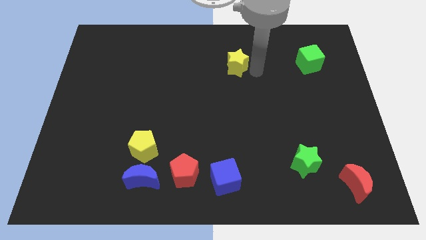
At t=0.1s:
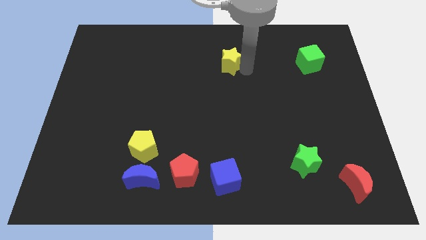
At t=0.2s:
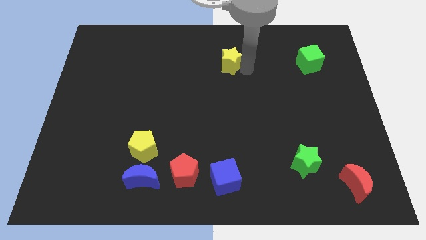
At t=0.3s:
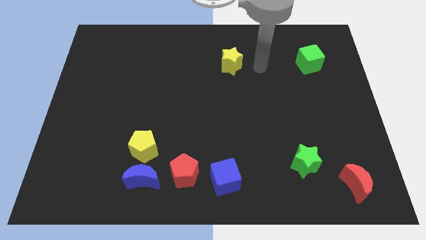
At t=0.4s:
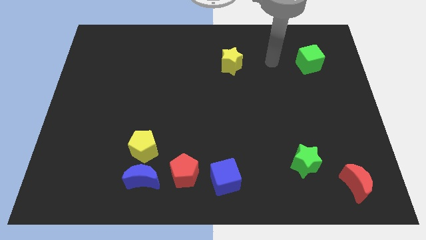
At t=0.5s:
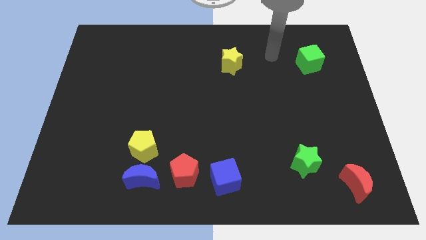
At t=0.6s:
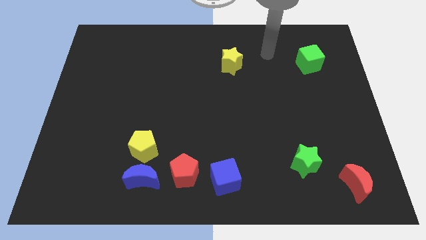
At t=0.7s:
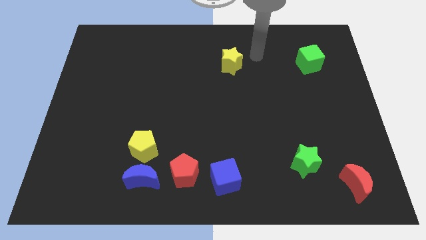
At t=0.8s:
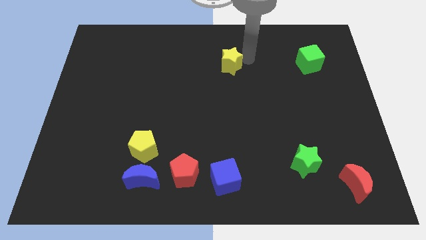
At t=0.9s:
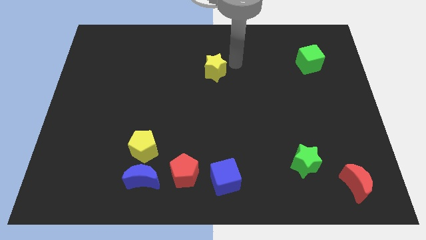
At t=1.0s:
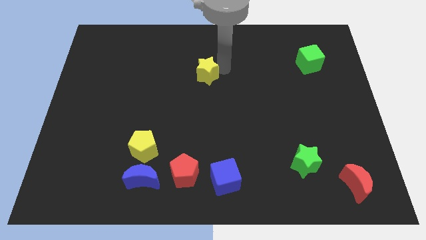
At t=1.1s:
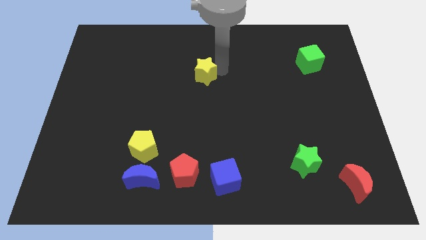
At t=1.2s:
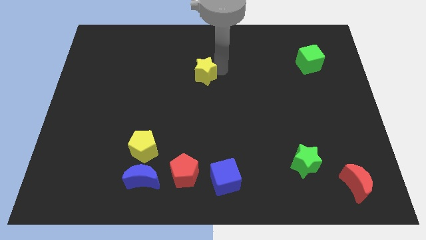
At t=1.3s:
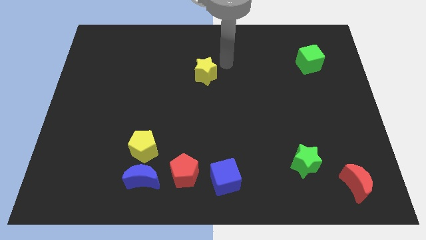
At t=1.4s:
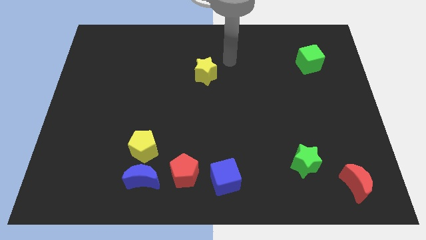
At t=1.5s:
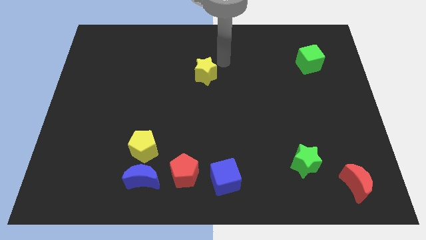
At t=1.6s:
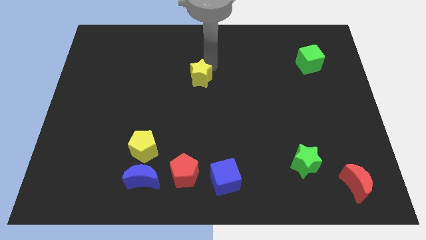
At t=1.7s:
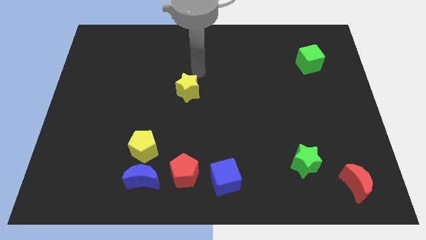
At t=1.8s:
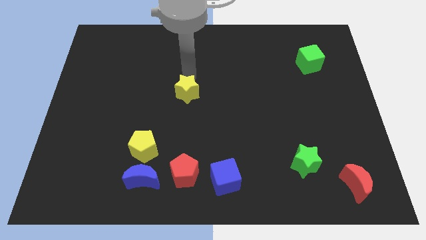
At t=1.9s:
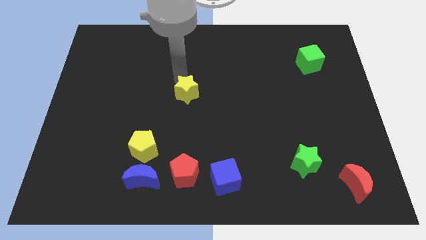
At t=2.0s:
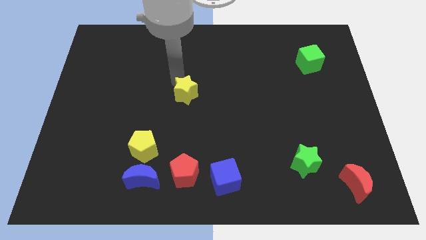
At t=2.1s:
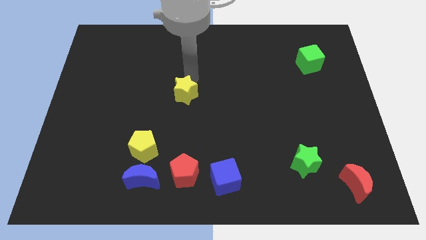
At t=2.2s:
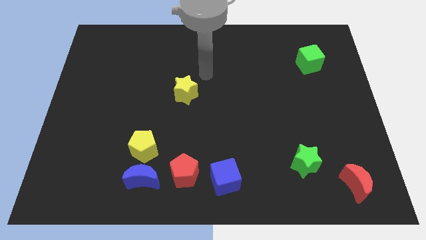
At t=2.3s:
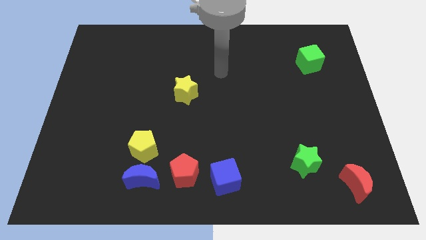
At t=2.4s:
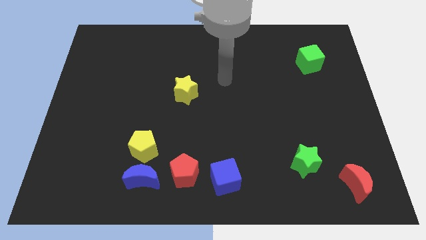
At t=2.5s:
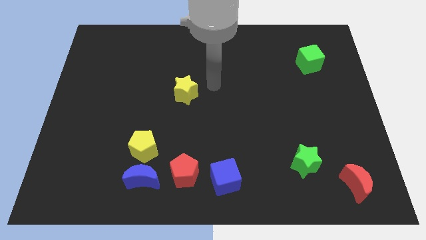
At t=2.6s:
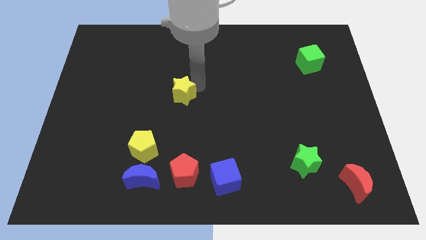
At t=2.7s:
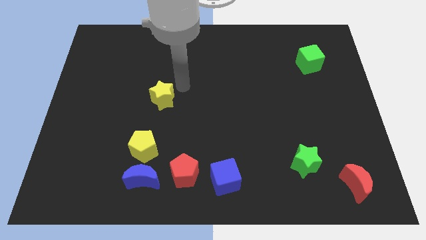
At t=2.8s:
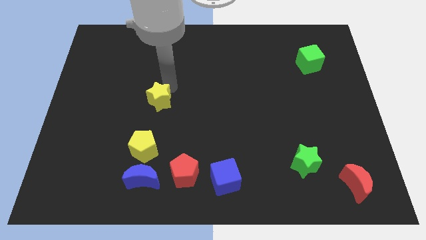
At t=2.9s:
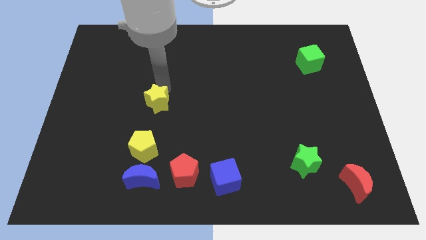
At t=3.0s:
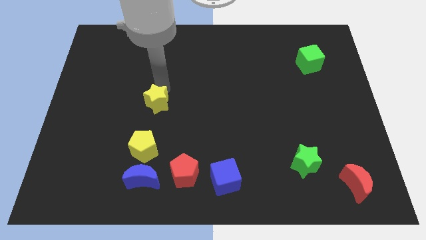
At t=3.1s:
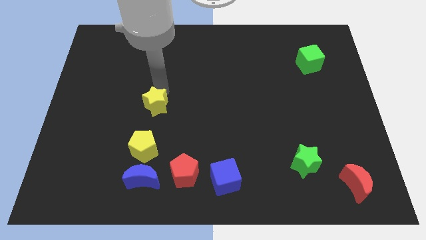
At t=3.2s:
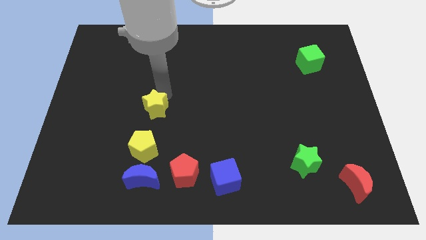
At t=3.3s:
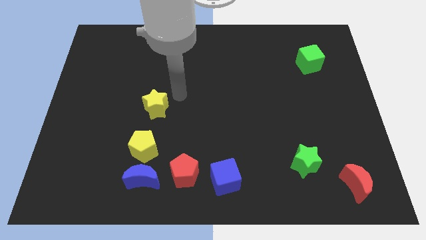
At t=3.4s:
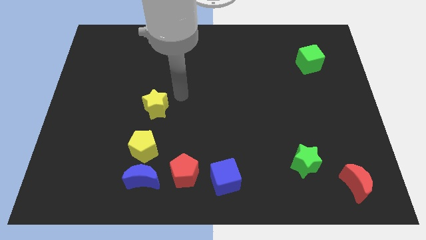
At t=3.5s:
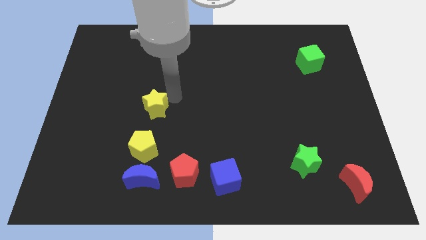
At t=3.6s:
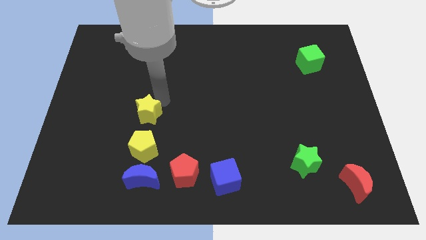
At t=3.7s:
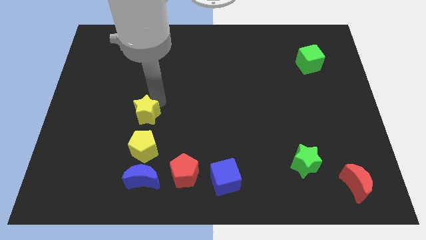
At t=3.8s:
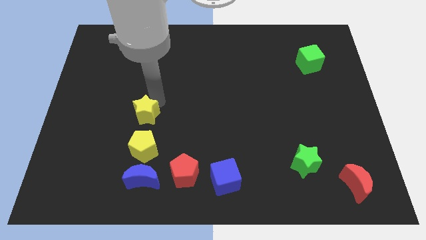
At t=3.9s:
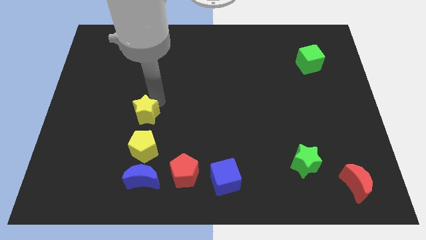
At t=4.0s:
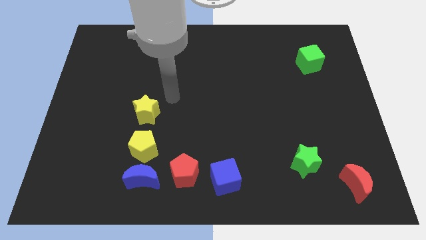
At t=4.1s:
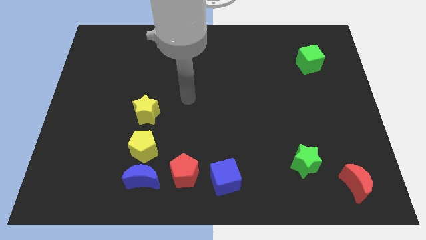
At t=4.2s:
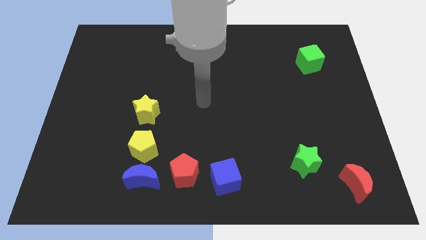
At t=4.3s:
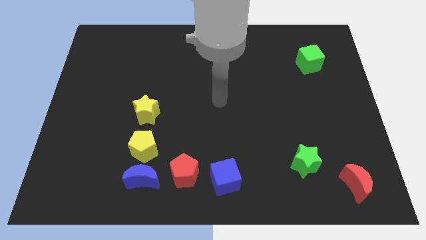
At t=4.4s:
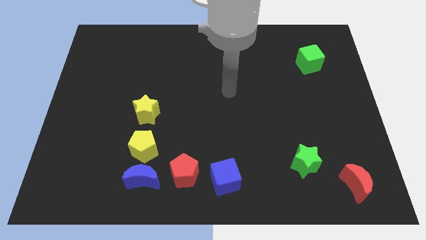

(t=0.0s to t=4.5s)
place the yellow star to the top of the yellow pentagon

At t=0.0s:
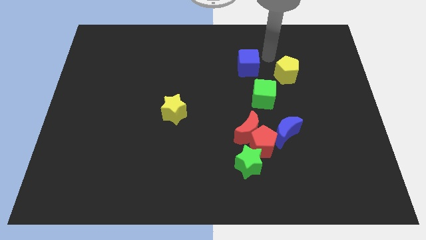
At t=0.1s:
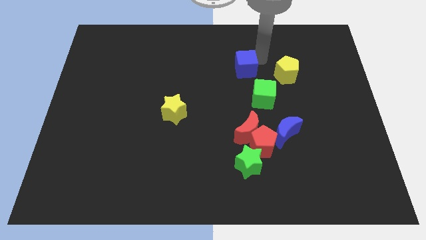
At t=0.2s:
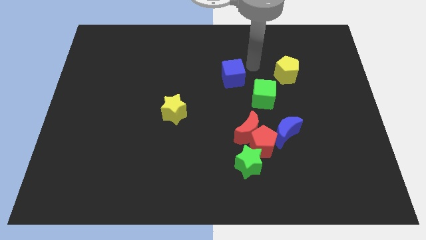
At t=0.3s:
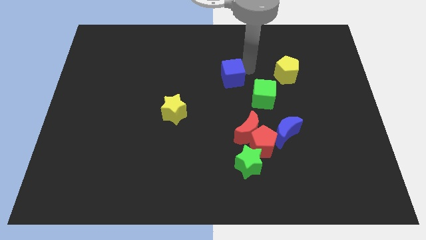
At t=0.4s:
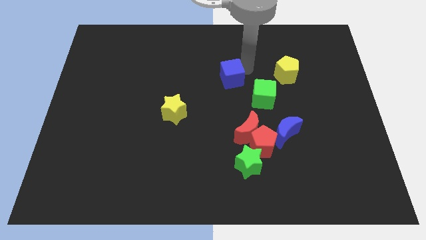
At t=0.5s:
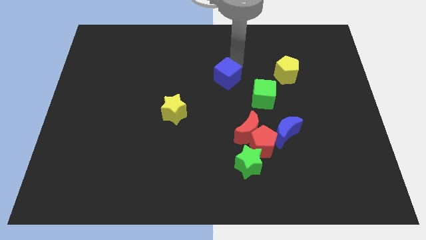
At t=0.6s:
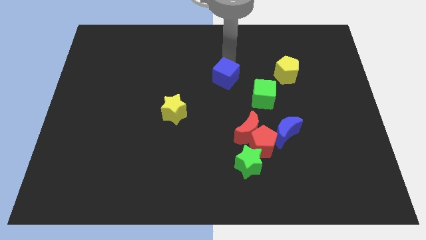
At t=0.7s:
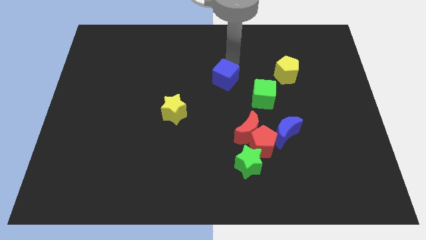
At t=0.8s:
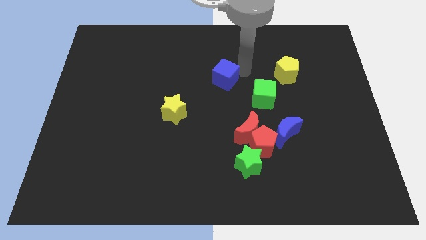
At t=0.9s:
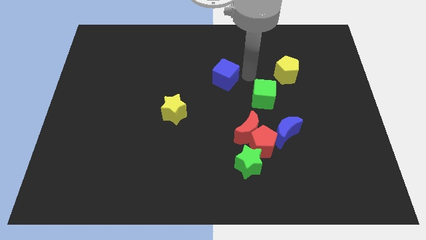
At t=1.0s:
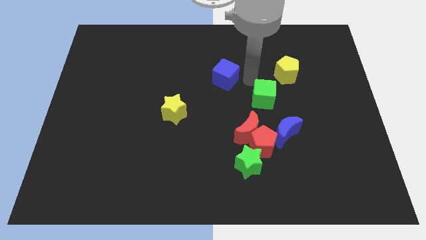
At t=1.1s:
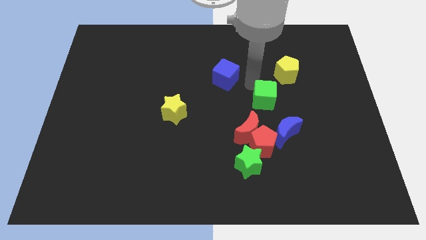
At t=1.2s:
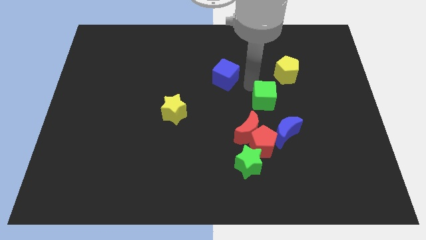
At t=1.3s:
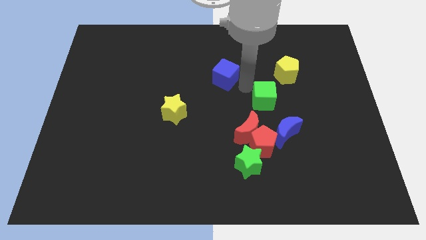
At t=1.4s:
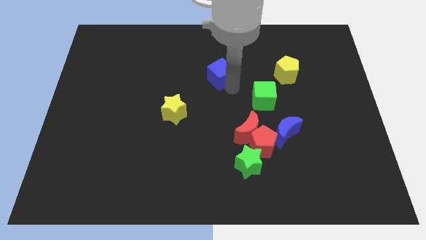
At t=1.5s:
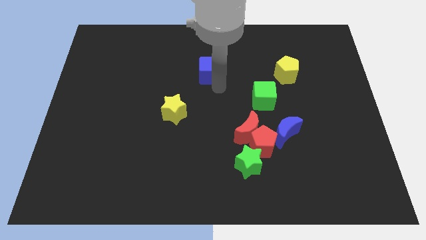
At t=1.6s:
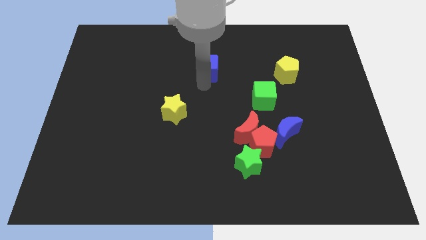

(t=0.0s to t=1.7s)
place the blue cube diagonally right to the yellow star

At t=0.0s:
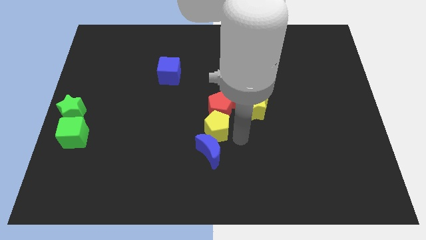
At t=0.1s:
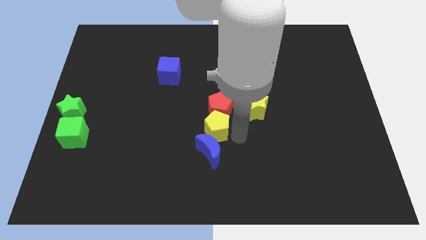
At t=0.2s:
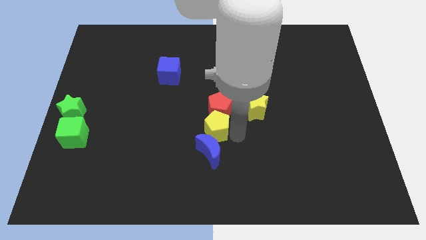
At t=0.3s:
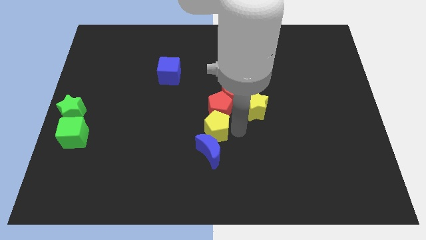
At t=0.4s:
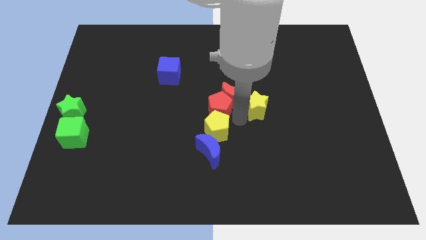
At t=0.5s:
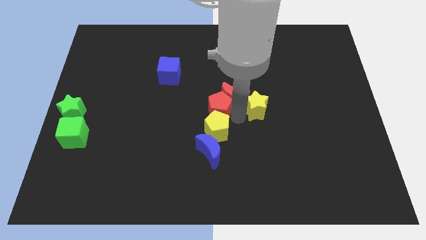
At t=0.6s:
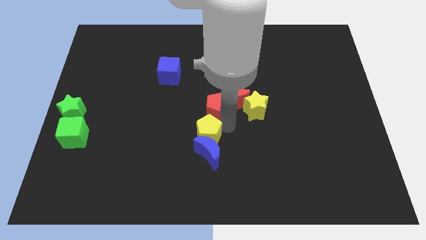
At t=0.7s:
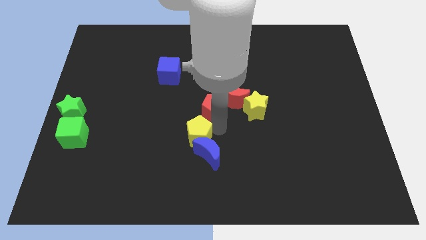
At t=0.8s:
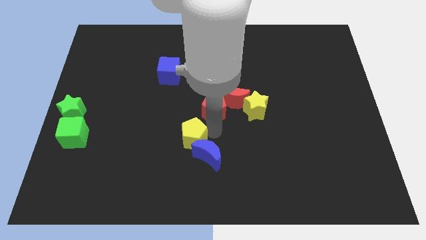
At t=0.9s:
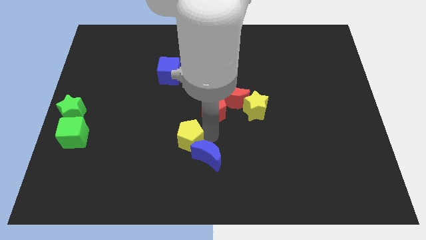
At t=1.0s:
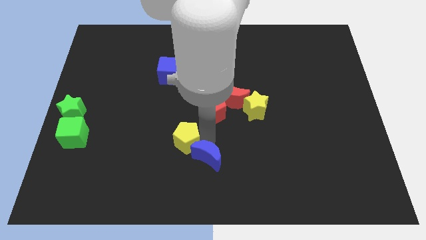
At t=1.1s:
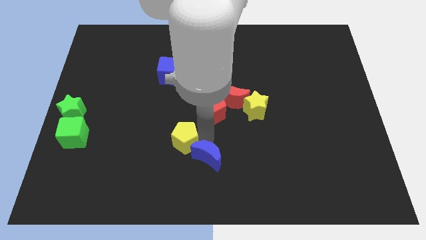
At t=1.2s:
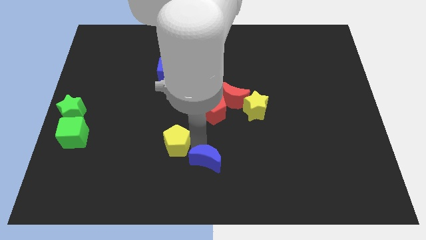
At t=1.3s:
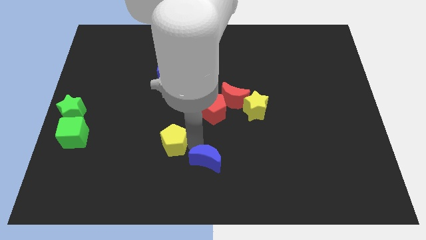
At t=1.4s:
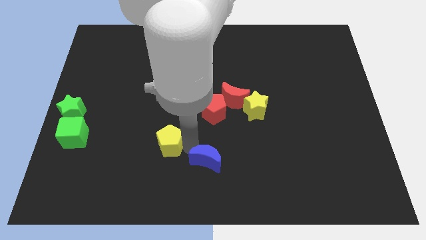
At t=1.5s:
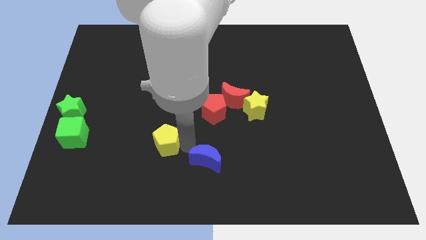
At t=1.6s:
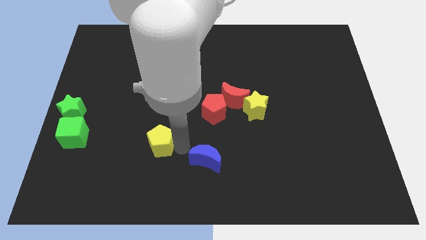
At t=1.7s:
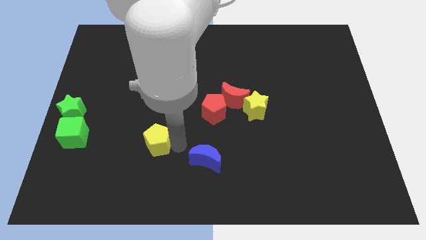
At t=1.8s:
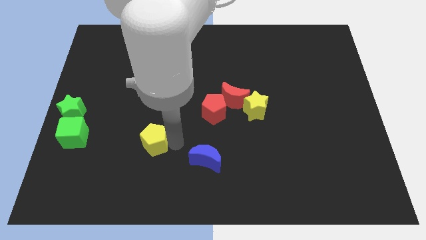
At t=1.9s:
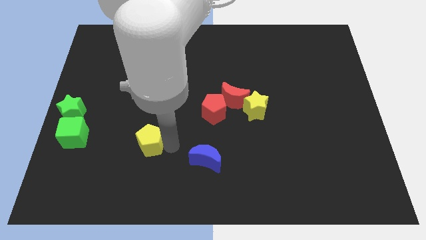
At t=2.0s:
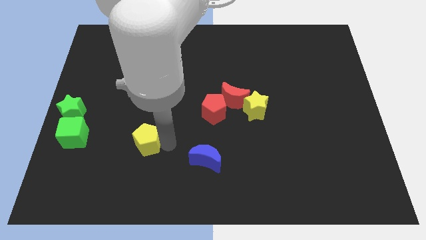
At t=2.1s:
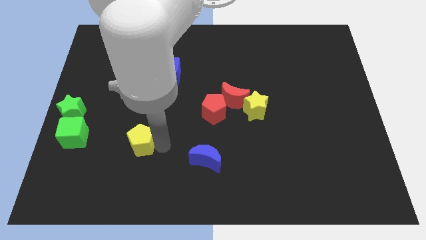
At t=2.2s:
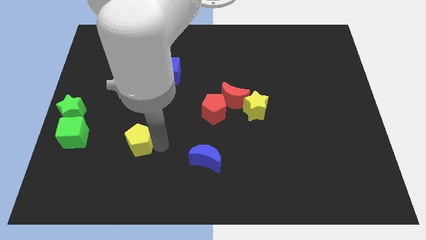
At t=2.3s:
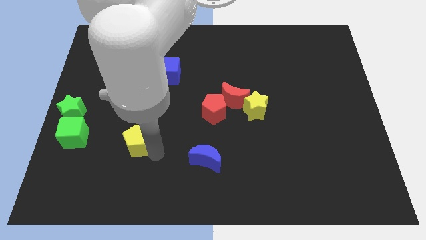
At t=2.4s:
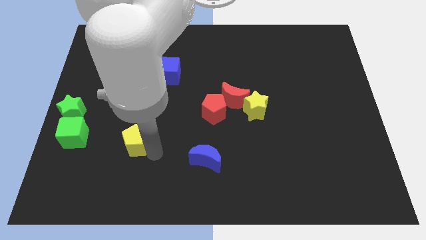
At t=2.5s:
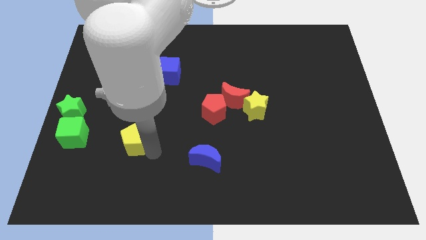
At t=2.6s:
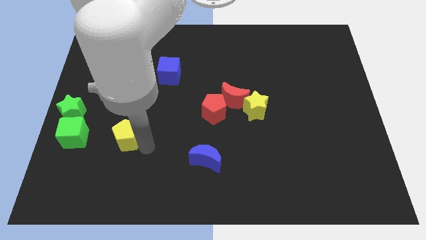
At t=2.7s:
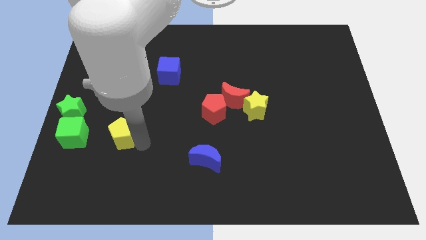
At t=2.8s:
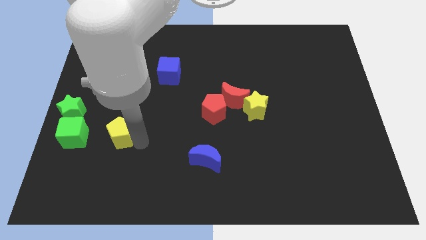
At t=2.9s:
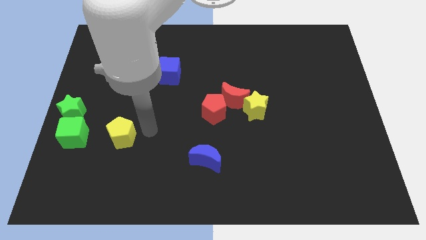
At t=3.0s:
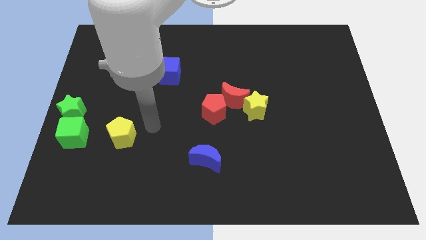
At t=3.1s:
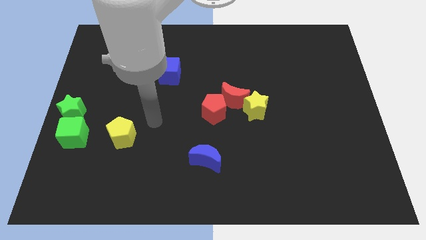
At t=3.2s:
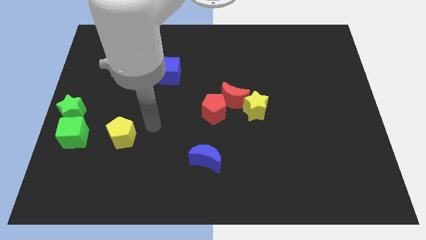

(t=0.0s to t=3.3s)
separate yellow pentagon from the group of blocks
